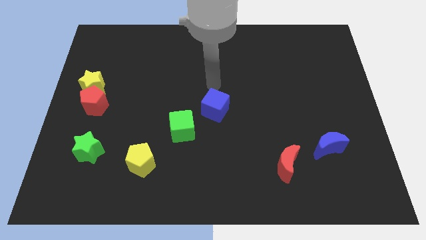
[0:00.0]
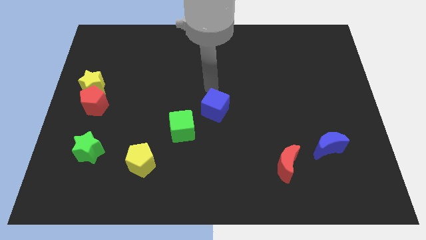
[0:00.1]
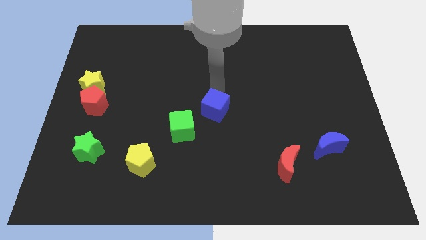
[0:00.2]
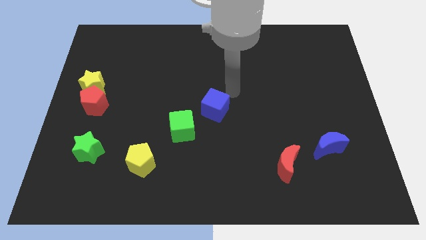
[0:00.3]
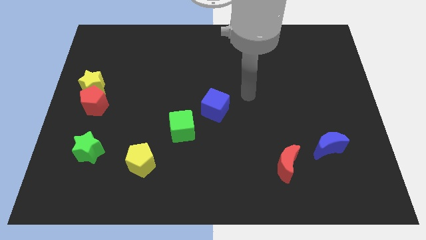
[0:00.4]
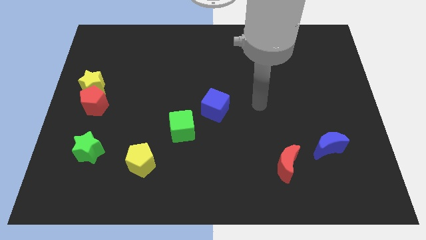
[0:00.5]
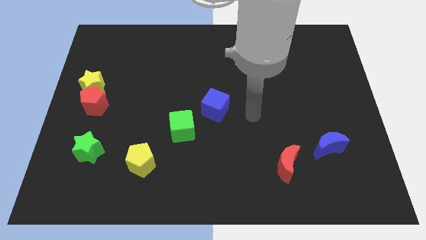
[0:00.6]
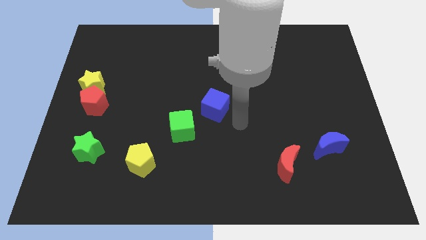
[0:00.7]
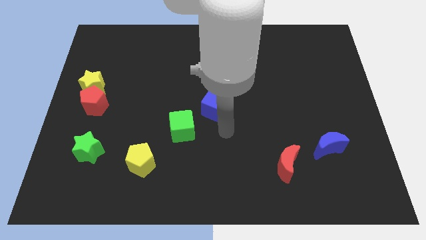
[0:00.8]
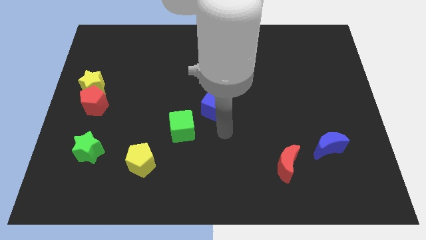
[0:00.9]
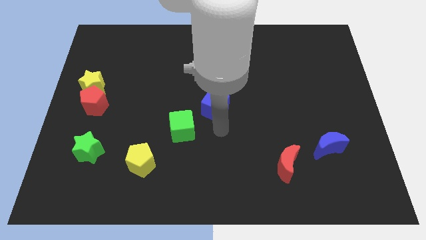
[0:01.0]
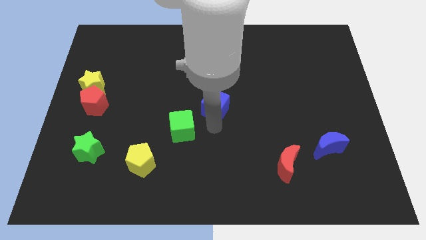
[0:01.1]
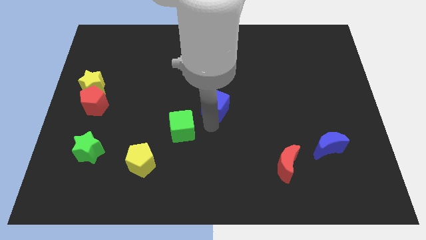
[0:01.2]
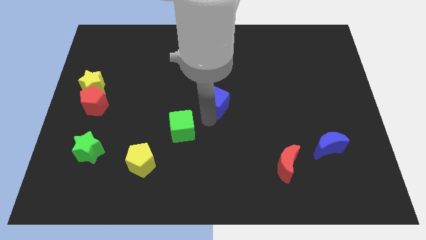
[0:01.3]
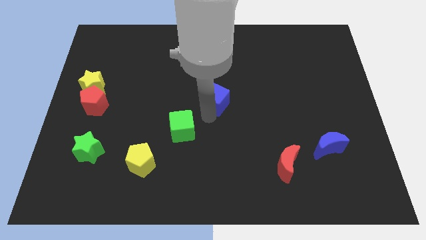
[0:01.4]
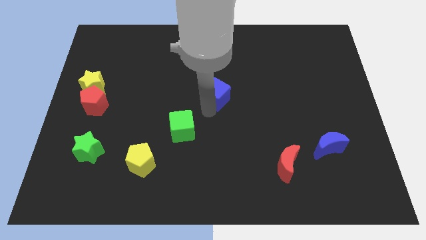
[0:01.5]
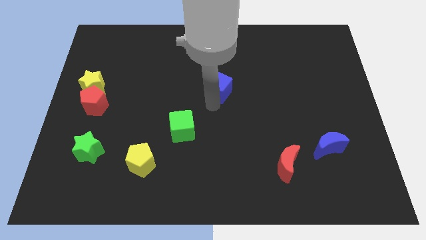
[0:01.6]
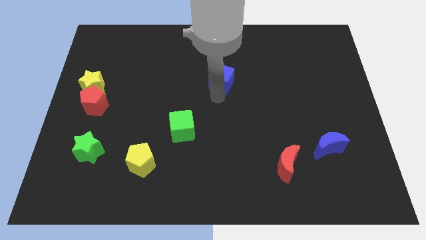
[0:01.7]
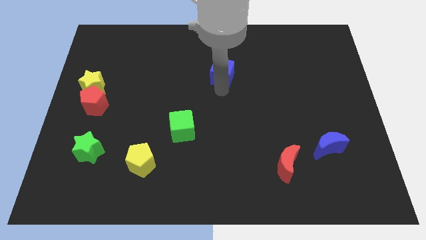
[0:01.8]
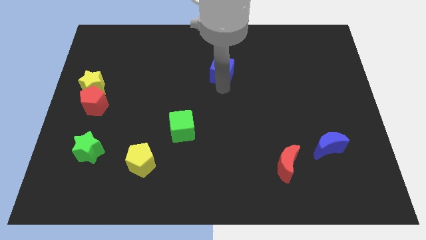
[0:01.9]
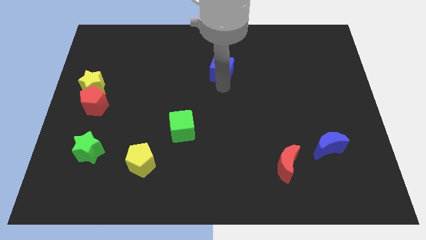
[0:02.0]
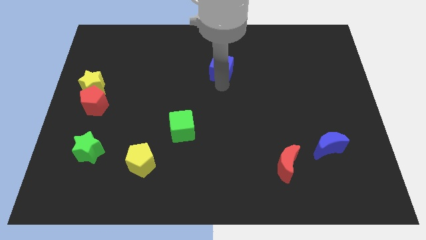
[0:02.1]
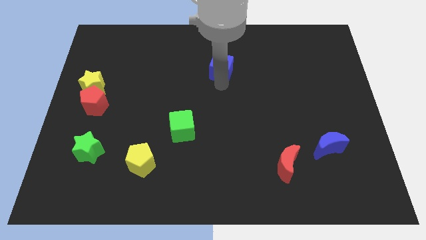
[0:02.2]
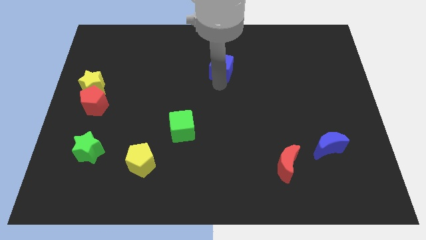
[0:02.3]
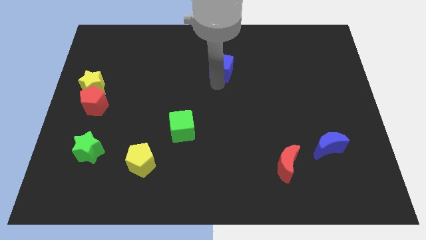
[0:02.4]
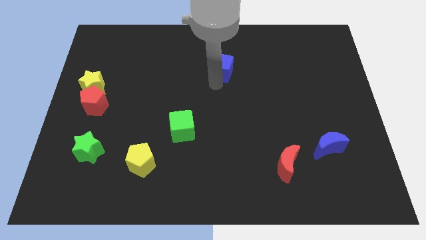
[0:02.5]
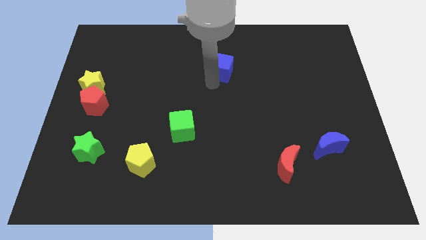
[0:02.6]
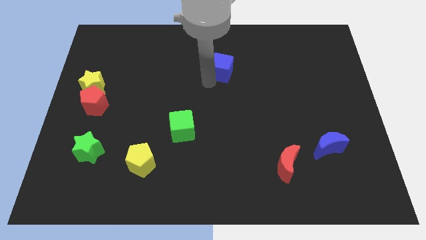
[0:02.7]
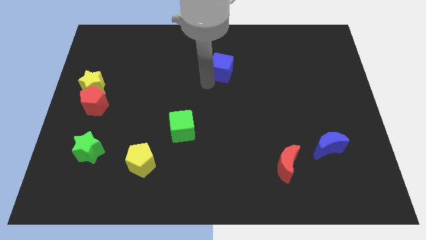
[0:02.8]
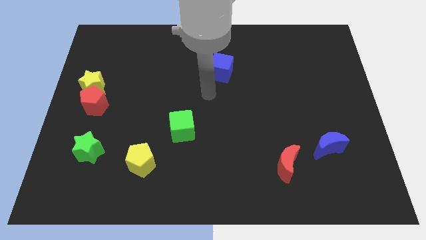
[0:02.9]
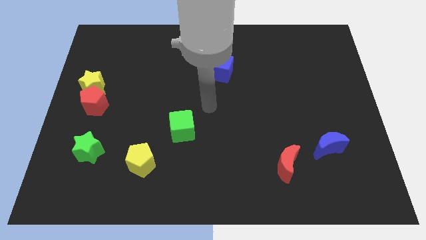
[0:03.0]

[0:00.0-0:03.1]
separate blue cube from green cube

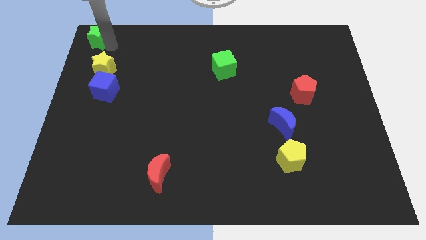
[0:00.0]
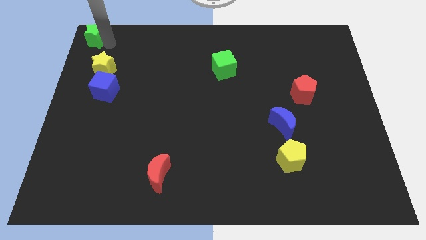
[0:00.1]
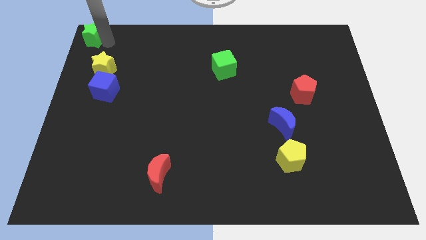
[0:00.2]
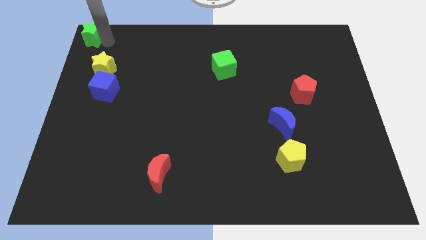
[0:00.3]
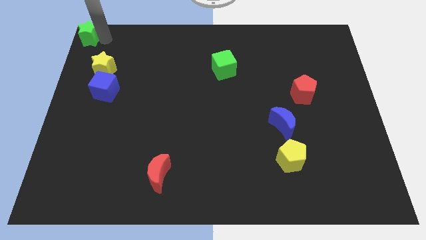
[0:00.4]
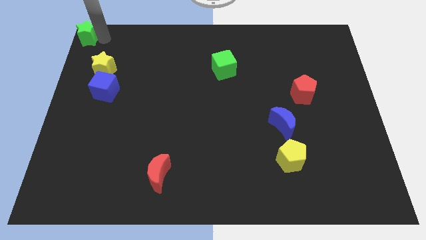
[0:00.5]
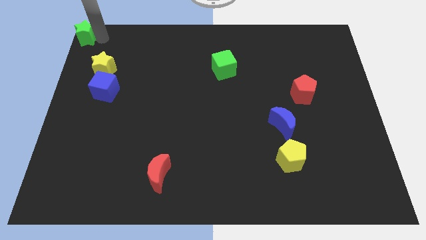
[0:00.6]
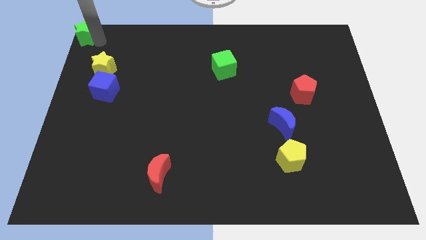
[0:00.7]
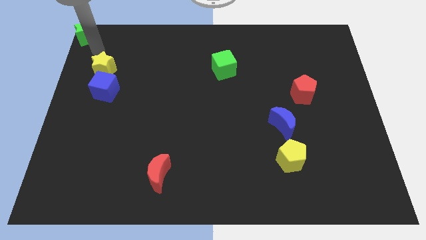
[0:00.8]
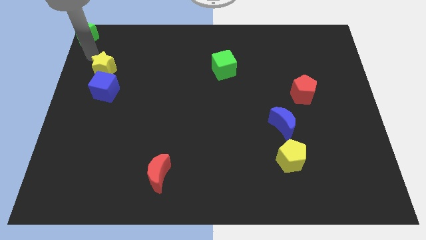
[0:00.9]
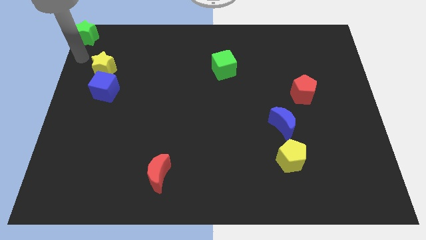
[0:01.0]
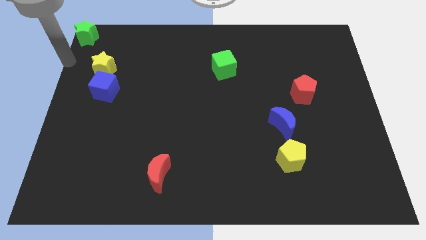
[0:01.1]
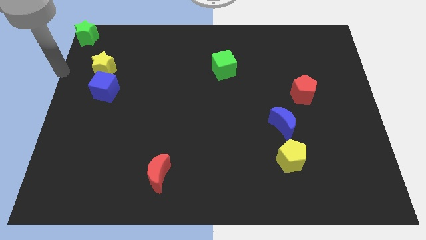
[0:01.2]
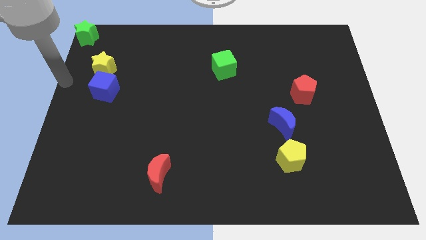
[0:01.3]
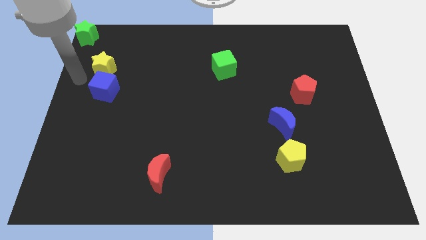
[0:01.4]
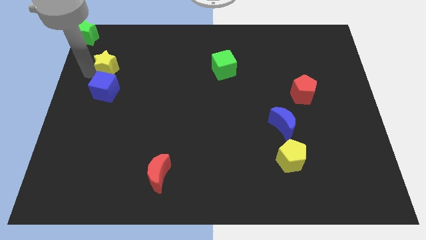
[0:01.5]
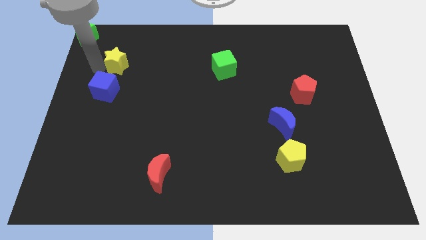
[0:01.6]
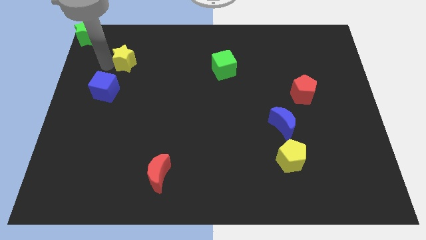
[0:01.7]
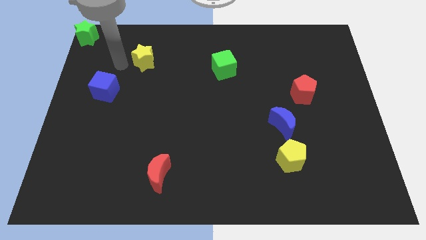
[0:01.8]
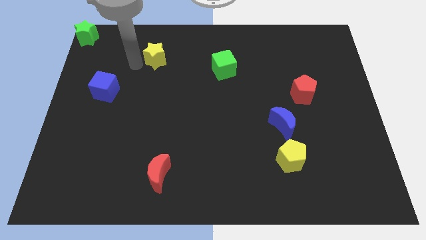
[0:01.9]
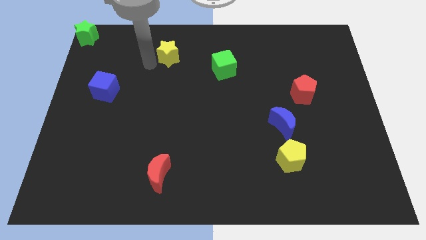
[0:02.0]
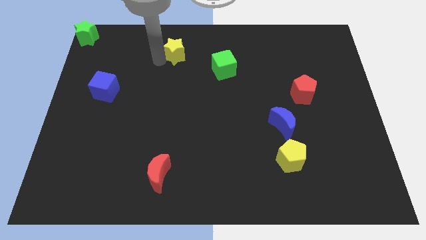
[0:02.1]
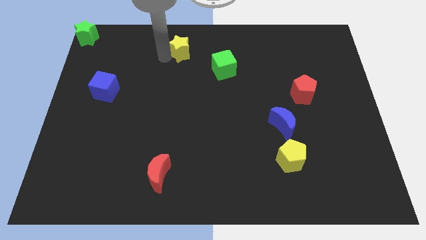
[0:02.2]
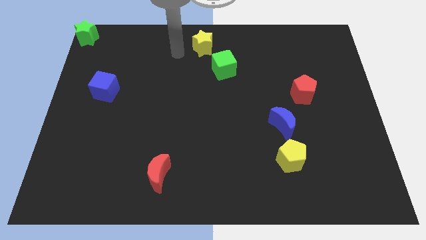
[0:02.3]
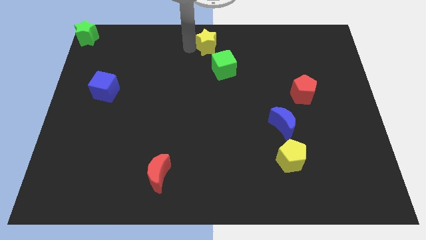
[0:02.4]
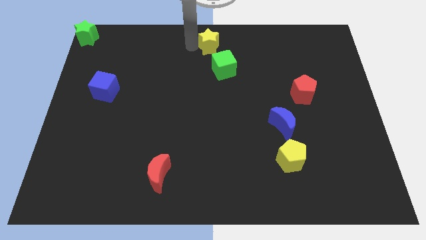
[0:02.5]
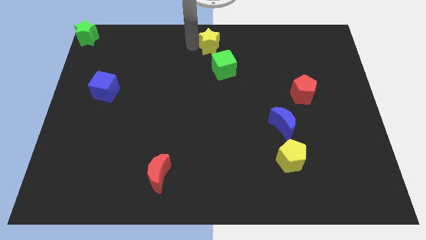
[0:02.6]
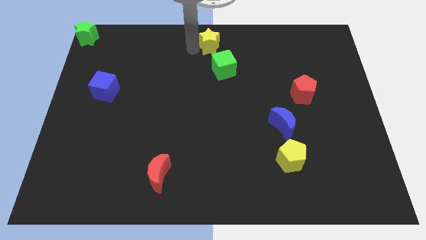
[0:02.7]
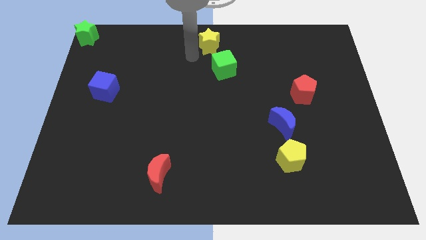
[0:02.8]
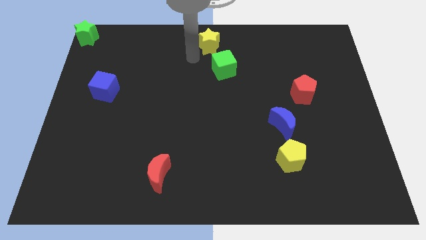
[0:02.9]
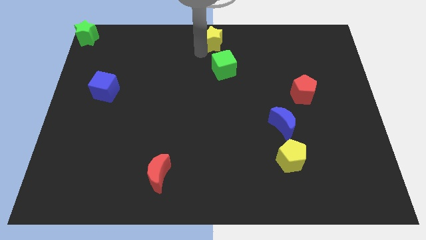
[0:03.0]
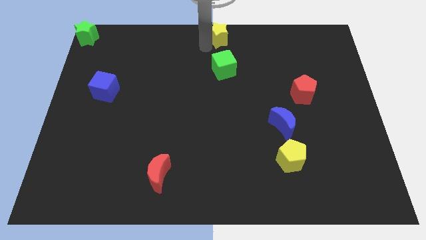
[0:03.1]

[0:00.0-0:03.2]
place the yellow star above the green cube

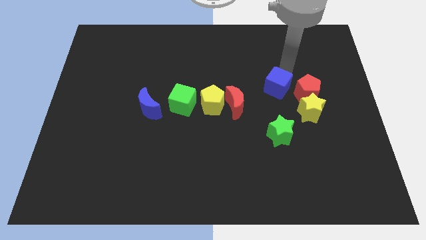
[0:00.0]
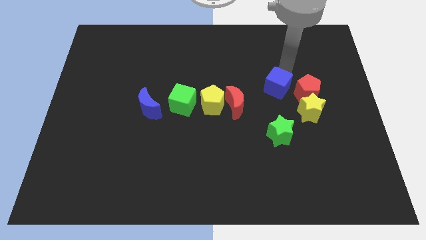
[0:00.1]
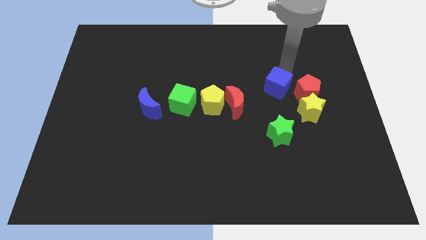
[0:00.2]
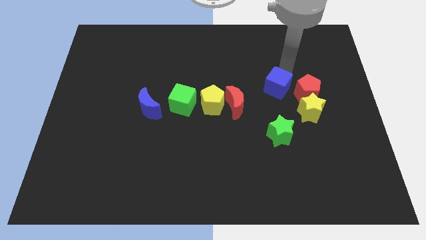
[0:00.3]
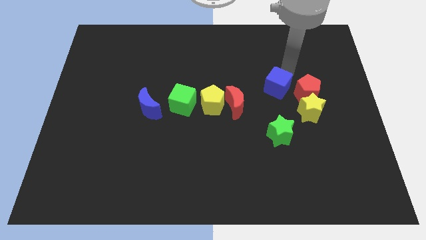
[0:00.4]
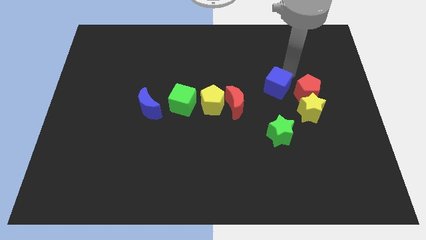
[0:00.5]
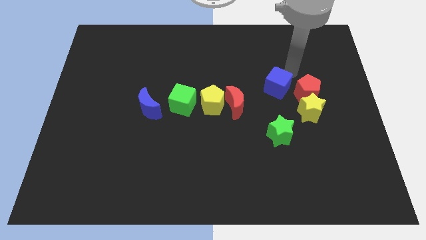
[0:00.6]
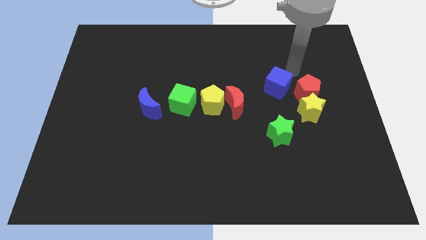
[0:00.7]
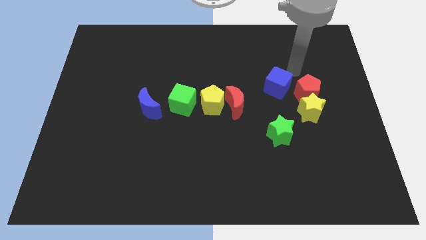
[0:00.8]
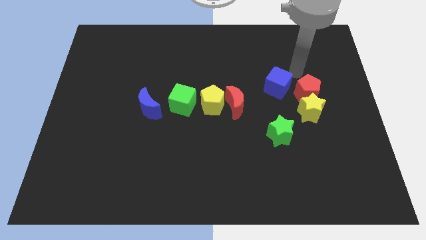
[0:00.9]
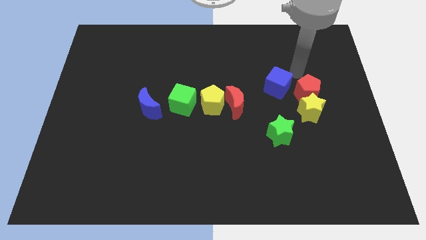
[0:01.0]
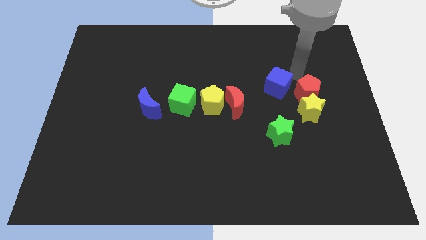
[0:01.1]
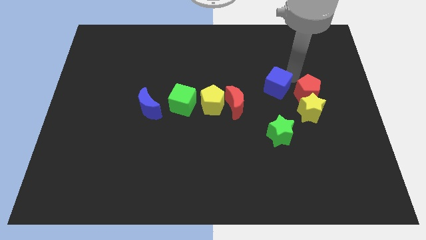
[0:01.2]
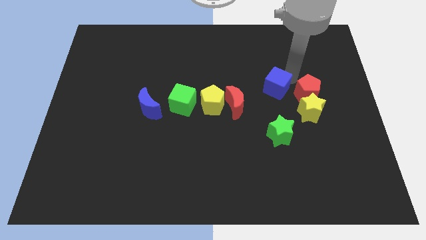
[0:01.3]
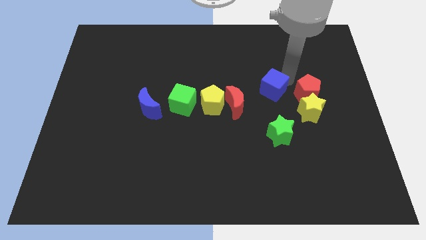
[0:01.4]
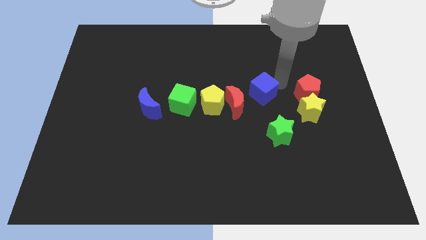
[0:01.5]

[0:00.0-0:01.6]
move the blue cube towards the center of the board

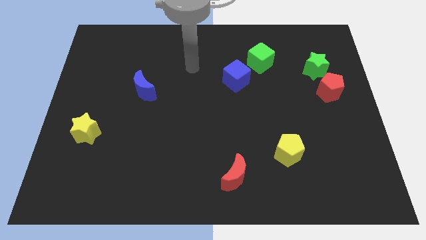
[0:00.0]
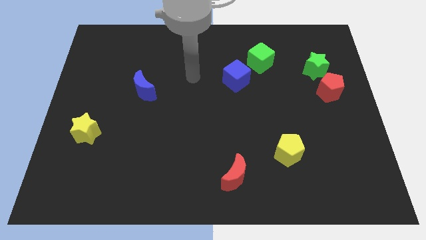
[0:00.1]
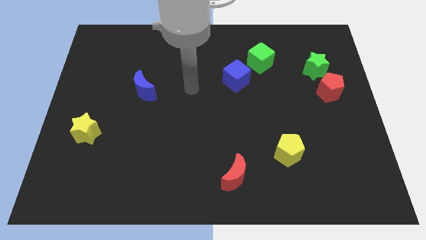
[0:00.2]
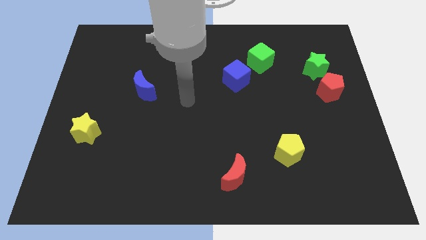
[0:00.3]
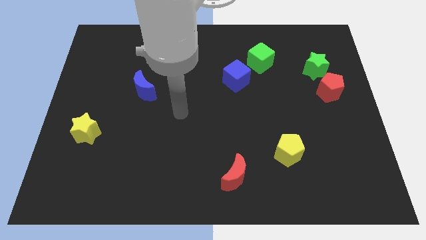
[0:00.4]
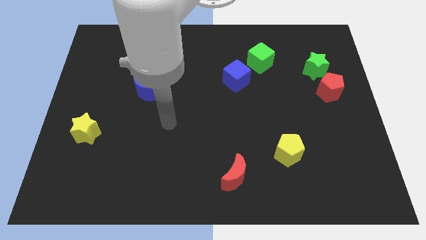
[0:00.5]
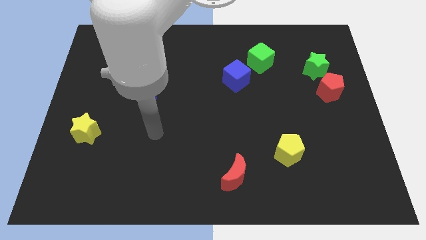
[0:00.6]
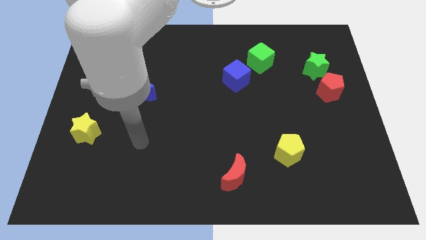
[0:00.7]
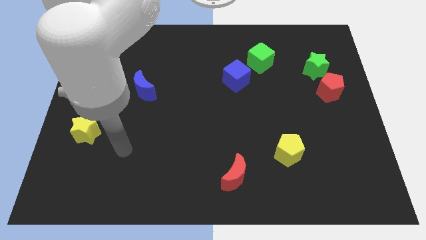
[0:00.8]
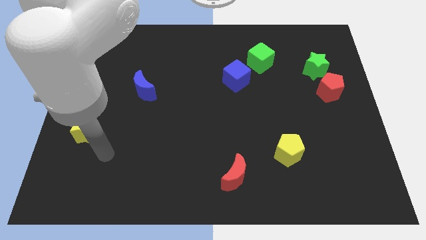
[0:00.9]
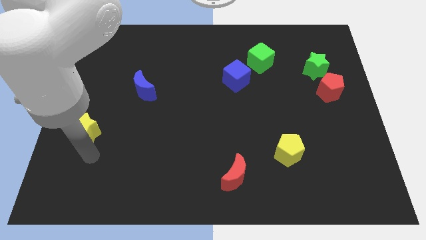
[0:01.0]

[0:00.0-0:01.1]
slide your arm close to yellow star
